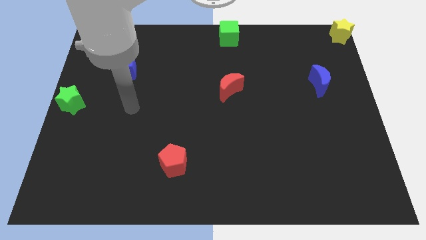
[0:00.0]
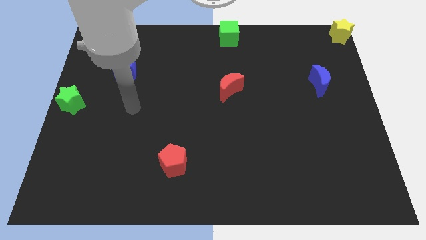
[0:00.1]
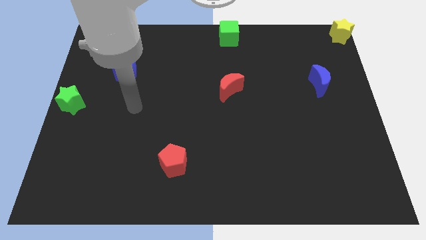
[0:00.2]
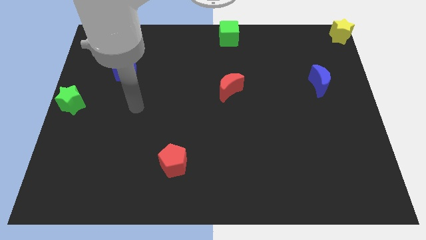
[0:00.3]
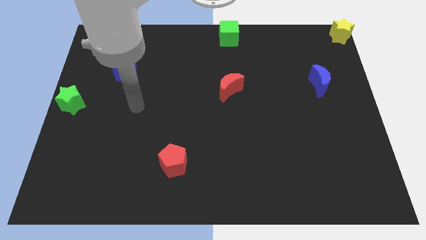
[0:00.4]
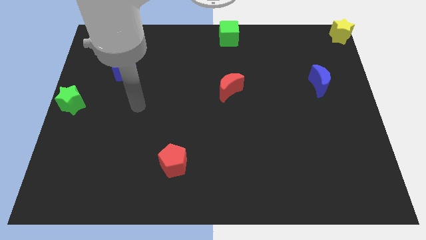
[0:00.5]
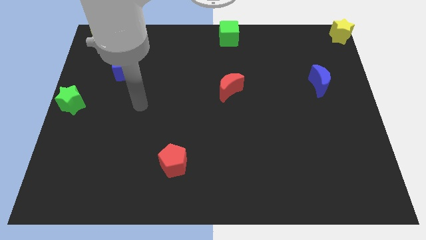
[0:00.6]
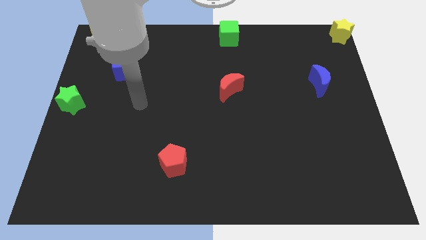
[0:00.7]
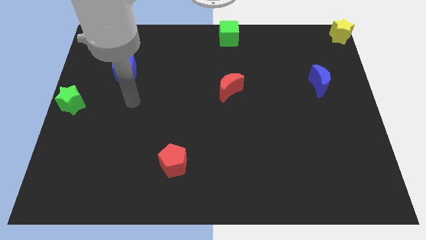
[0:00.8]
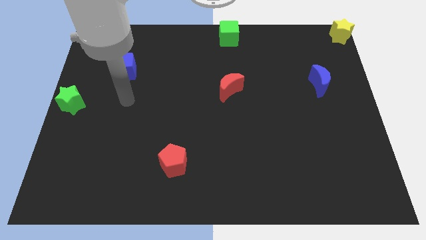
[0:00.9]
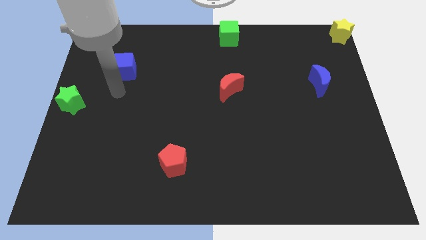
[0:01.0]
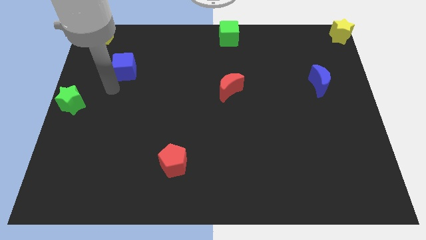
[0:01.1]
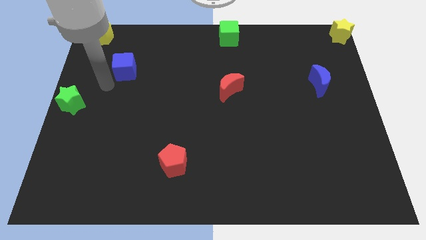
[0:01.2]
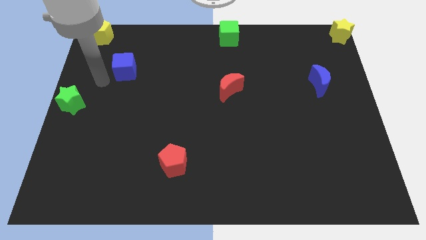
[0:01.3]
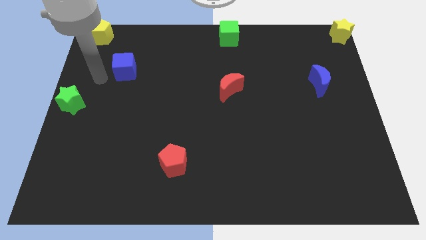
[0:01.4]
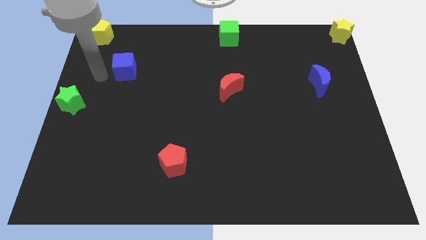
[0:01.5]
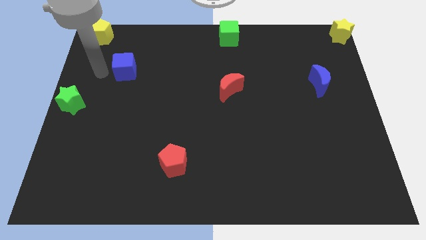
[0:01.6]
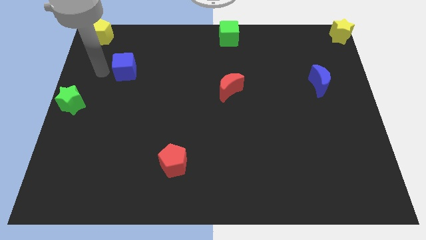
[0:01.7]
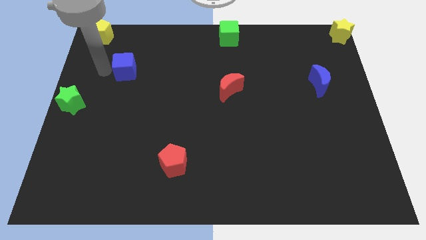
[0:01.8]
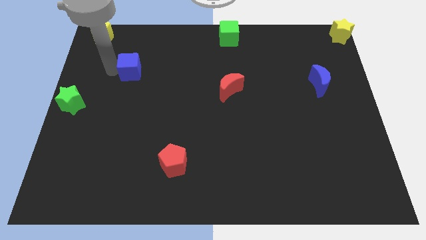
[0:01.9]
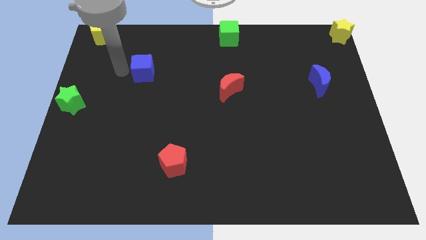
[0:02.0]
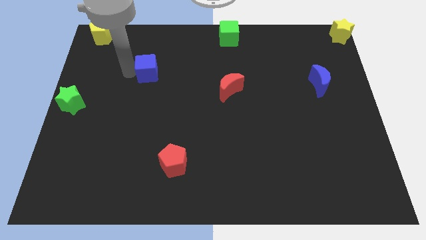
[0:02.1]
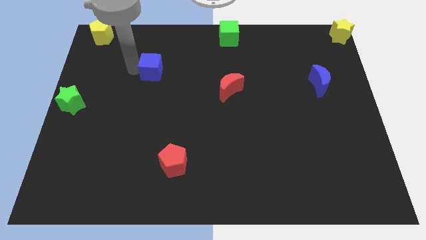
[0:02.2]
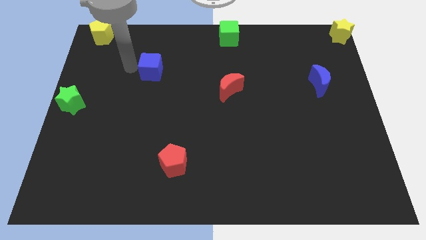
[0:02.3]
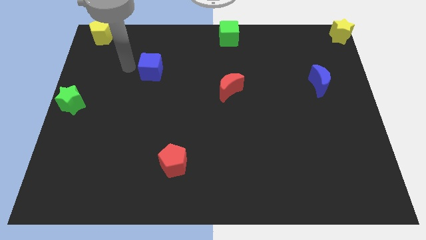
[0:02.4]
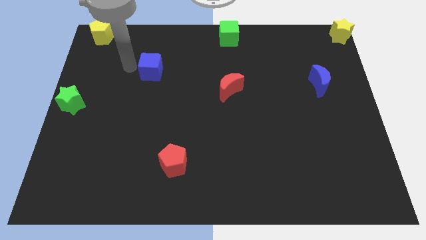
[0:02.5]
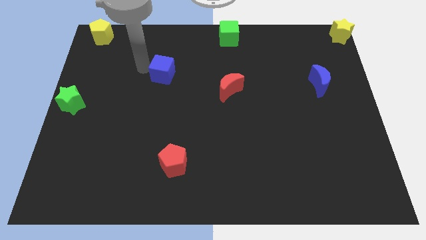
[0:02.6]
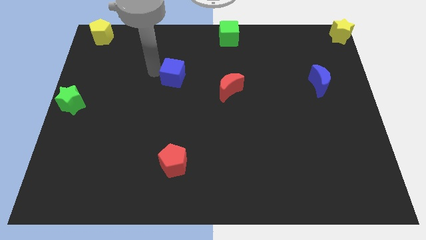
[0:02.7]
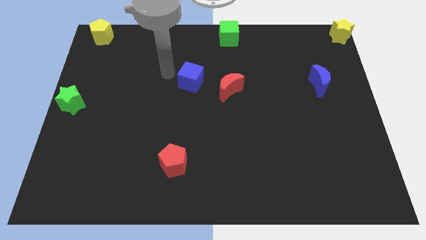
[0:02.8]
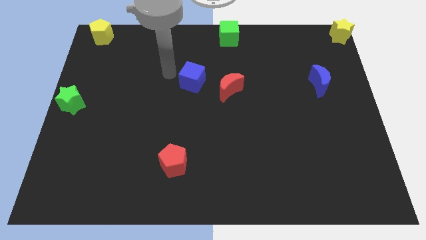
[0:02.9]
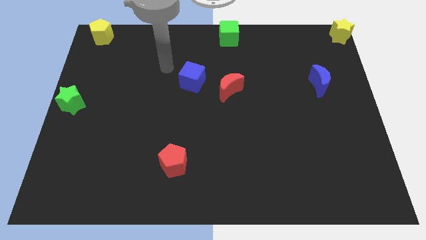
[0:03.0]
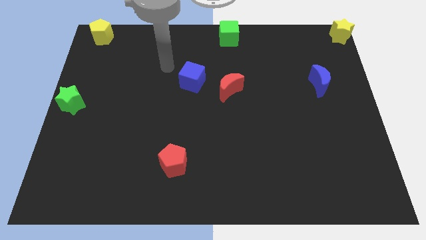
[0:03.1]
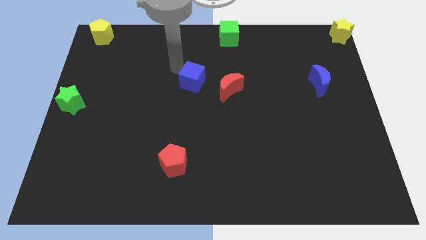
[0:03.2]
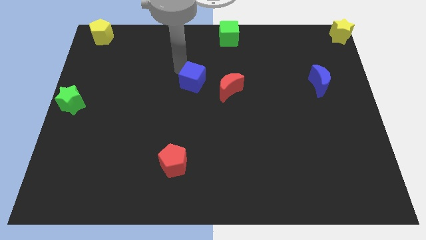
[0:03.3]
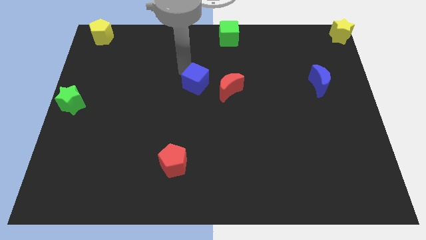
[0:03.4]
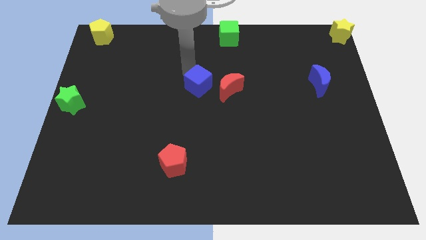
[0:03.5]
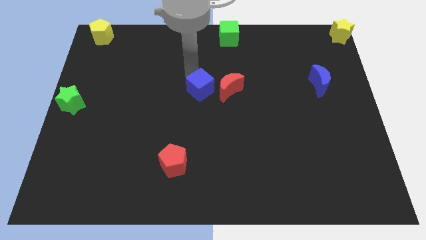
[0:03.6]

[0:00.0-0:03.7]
push the blue cube to the left side of the red moon

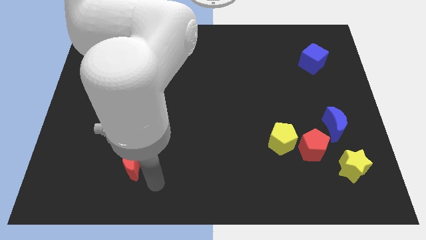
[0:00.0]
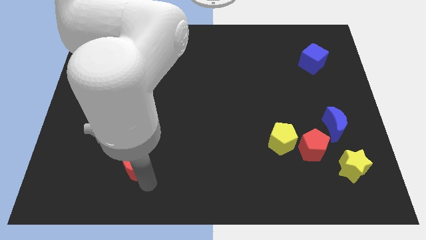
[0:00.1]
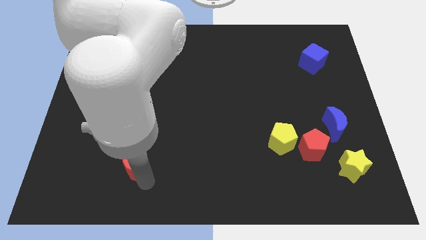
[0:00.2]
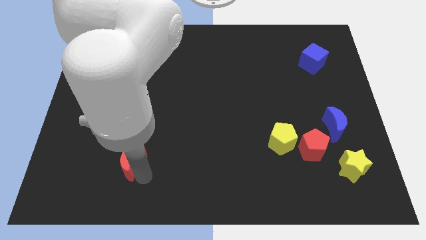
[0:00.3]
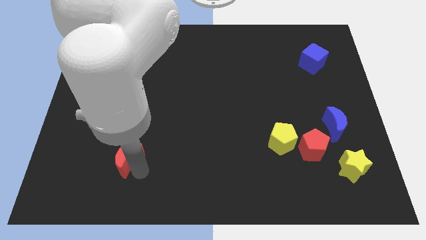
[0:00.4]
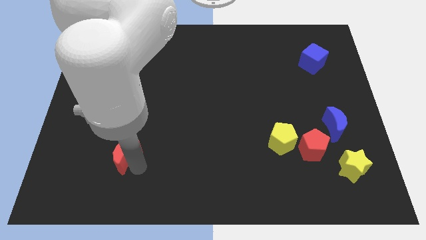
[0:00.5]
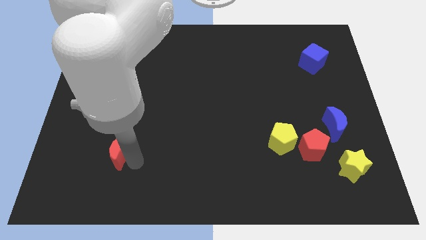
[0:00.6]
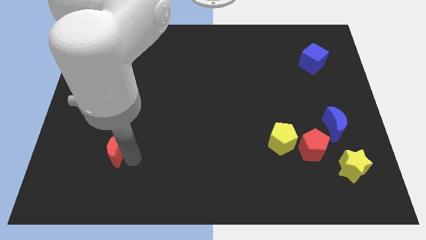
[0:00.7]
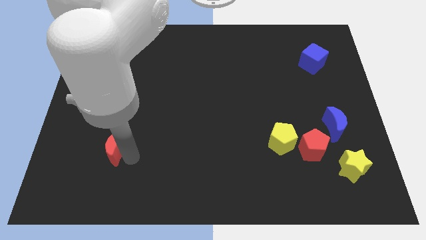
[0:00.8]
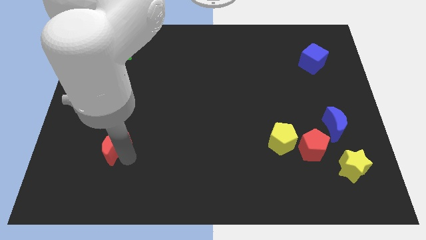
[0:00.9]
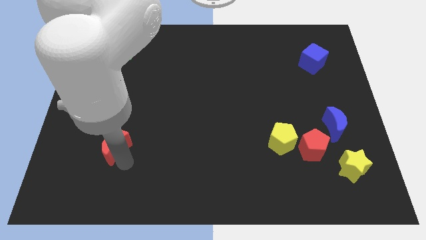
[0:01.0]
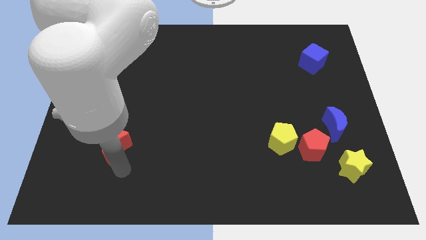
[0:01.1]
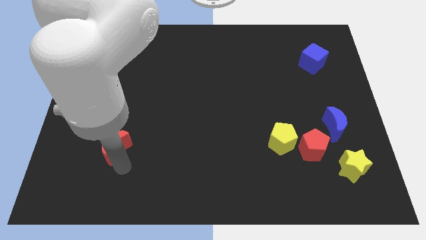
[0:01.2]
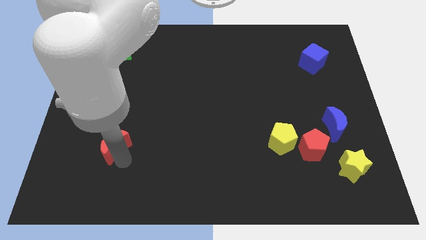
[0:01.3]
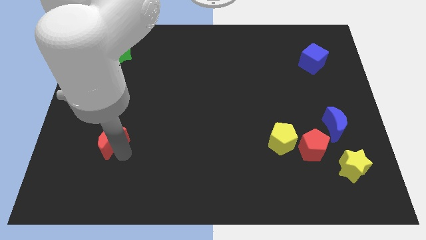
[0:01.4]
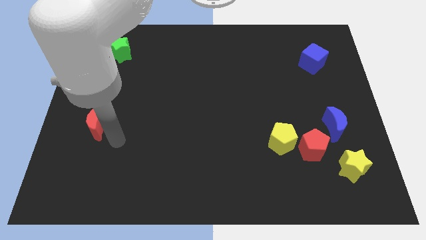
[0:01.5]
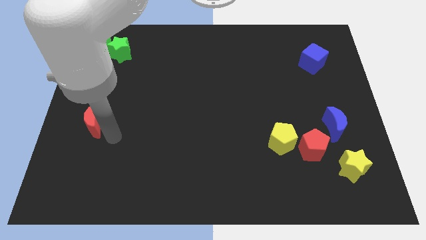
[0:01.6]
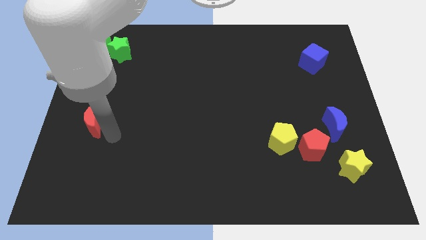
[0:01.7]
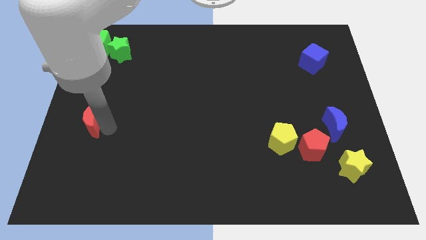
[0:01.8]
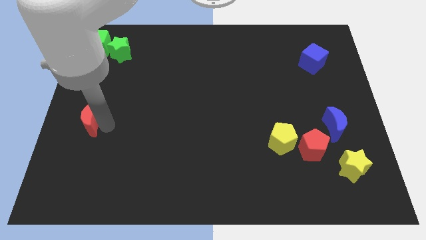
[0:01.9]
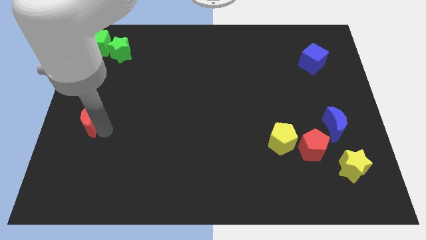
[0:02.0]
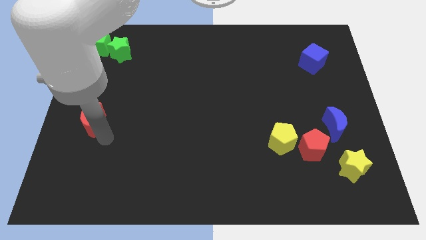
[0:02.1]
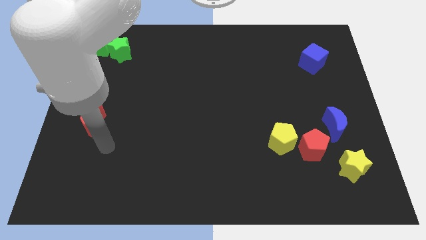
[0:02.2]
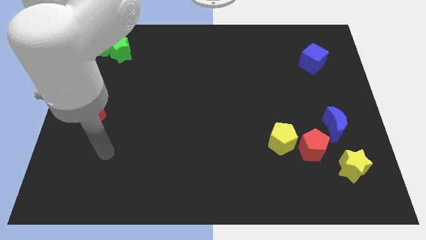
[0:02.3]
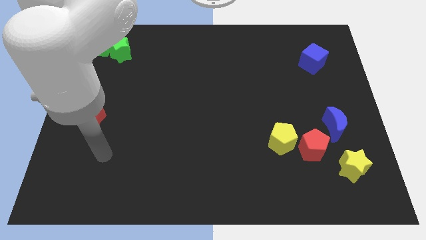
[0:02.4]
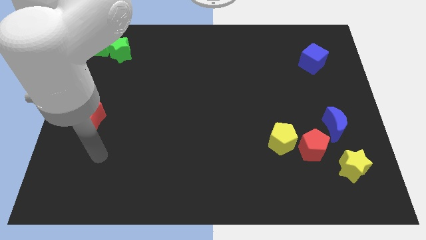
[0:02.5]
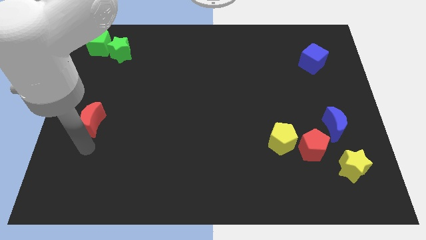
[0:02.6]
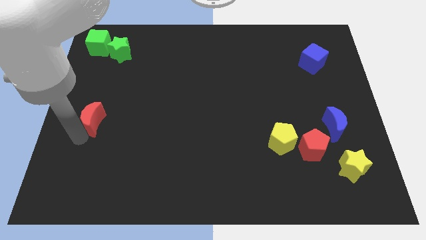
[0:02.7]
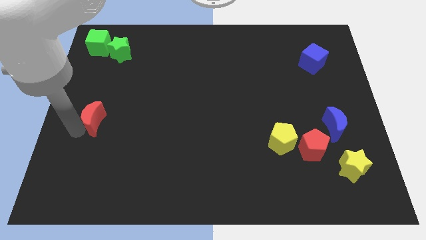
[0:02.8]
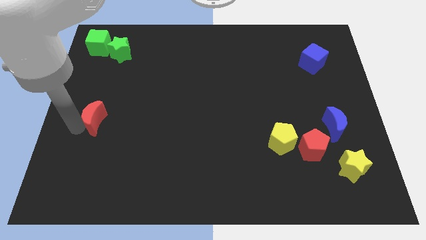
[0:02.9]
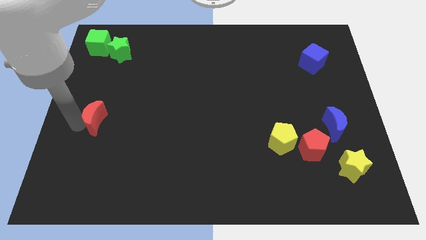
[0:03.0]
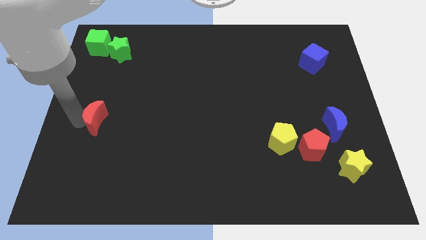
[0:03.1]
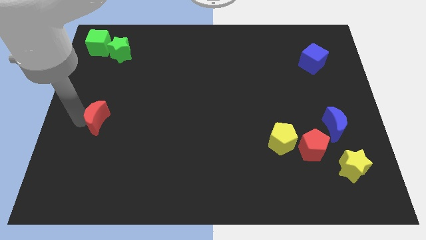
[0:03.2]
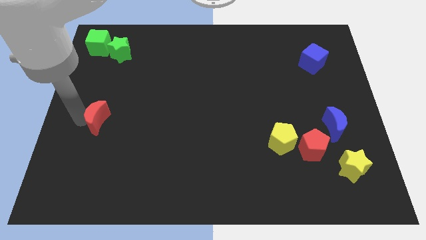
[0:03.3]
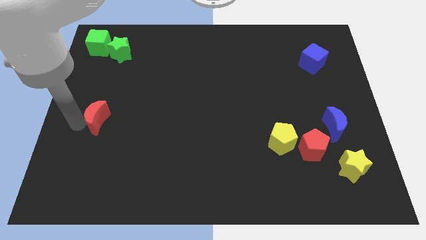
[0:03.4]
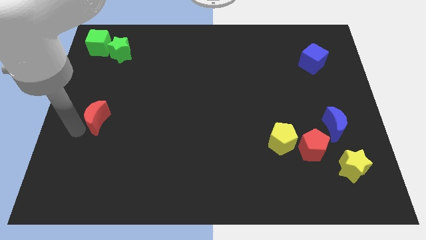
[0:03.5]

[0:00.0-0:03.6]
place the red moon between the green cube and star

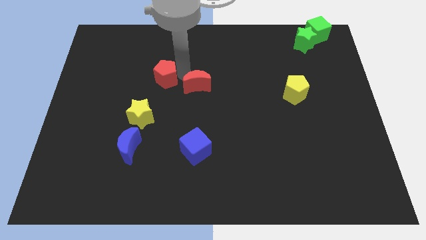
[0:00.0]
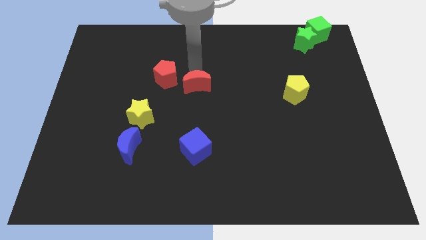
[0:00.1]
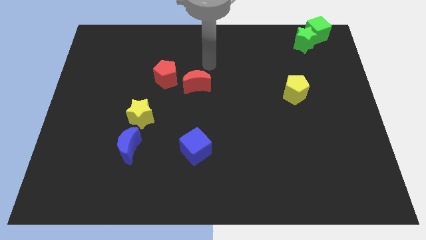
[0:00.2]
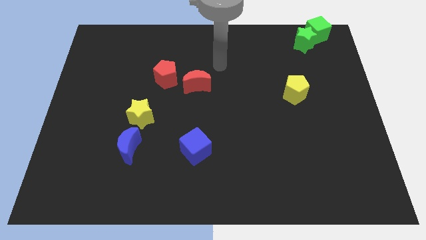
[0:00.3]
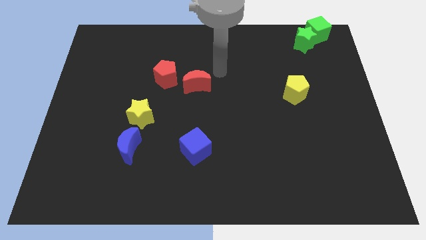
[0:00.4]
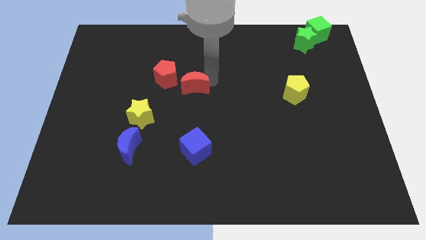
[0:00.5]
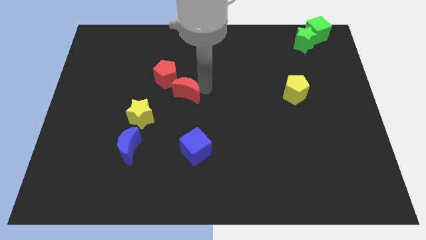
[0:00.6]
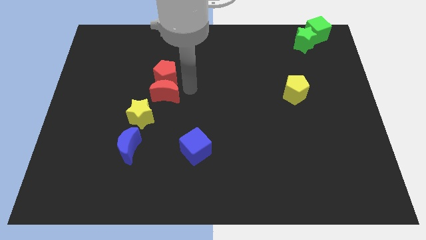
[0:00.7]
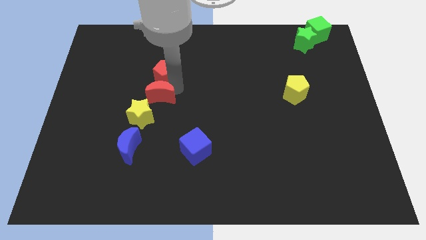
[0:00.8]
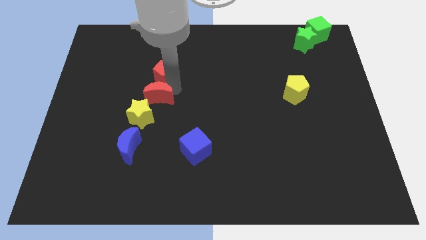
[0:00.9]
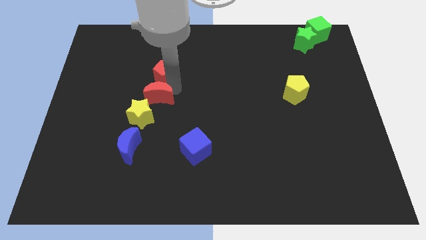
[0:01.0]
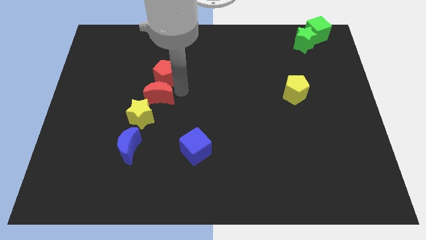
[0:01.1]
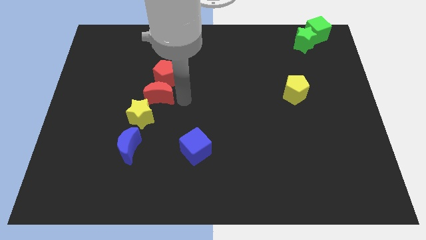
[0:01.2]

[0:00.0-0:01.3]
place the red moon vertically below the red pentagon

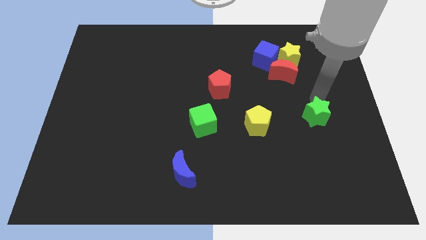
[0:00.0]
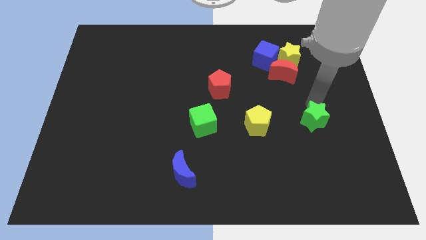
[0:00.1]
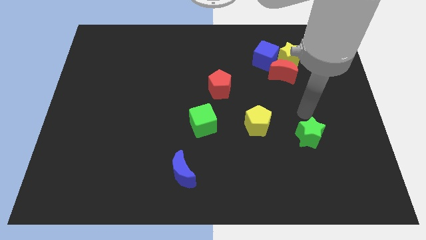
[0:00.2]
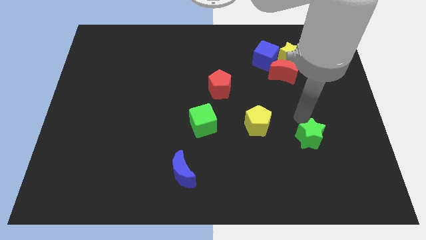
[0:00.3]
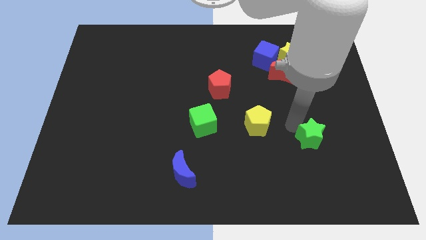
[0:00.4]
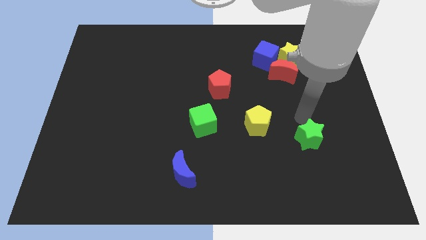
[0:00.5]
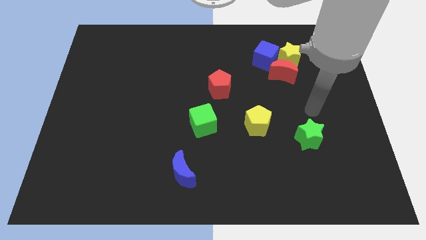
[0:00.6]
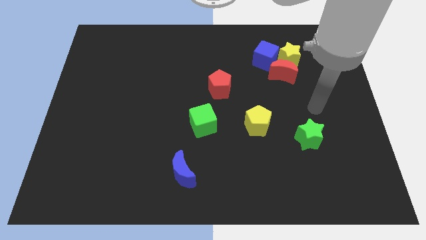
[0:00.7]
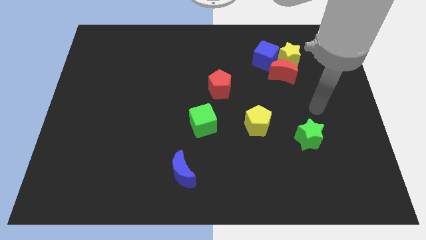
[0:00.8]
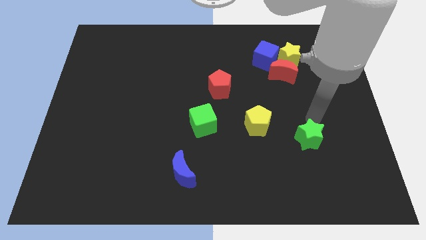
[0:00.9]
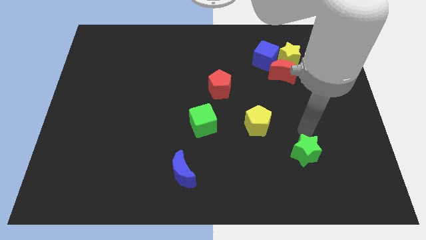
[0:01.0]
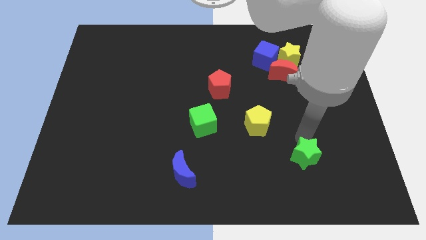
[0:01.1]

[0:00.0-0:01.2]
move the green star slightly towards down
